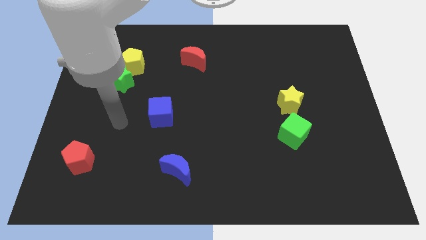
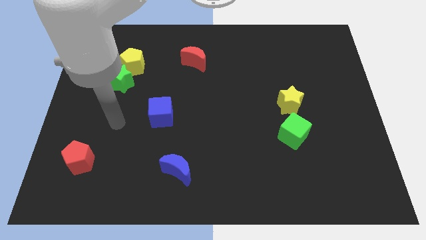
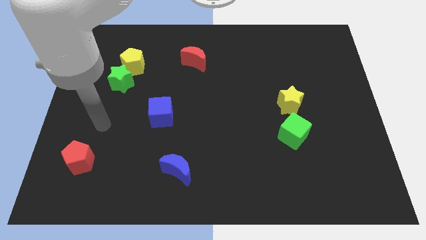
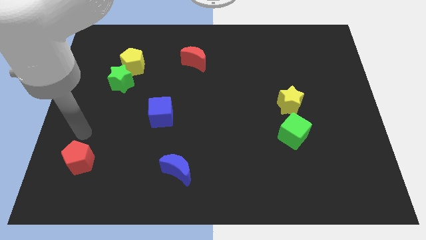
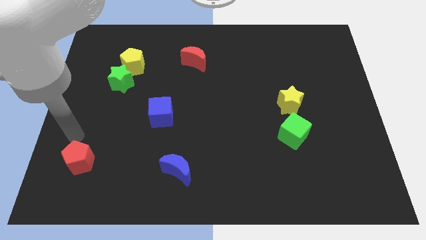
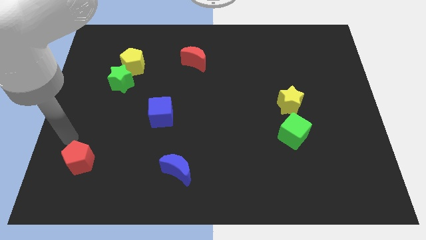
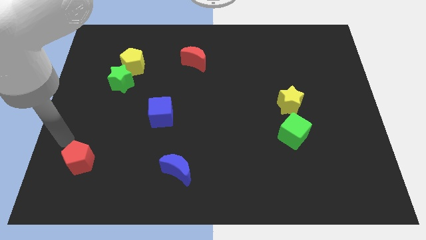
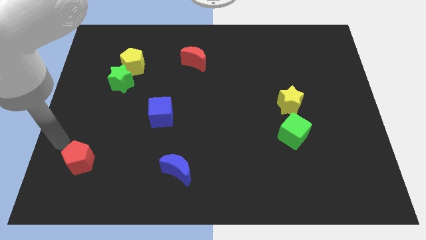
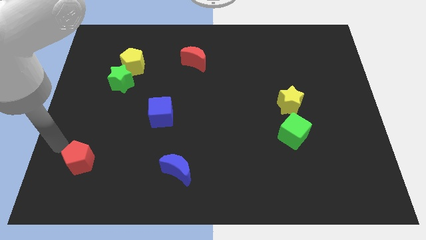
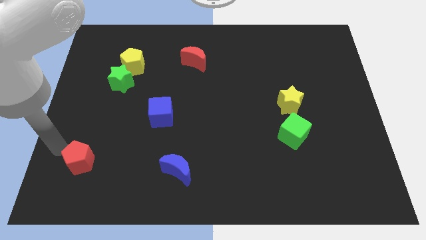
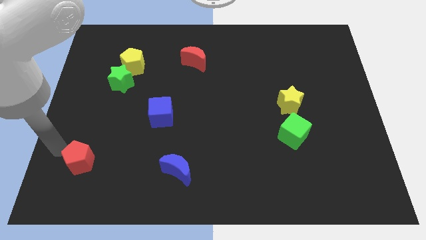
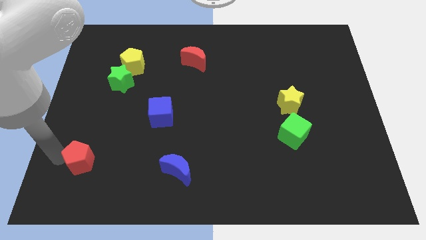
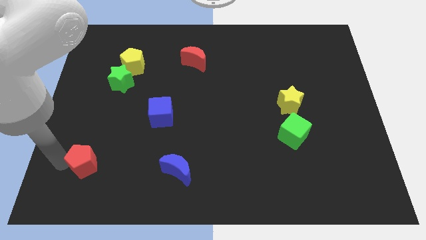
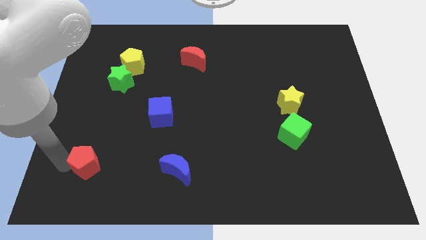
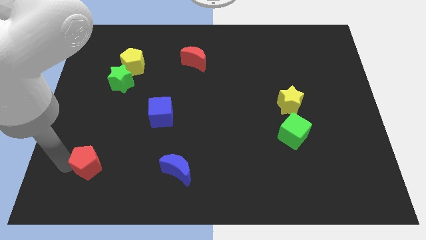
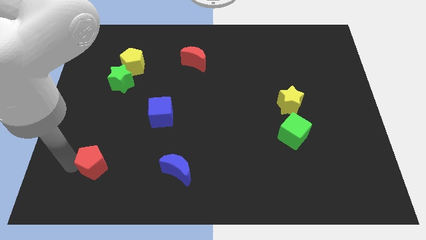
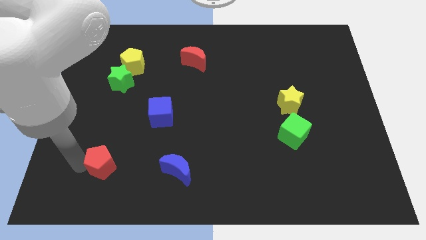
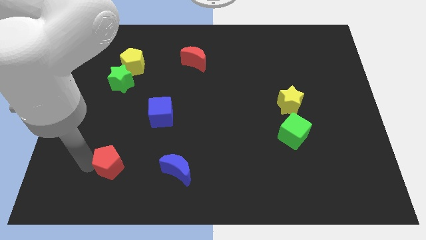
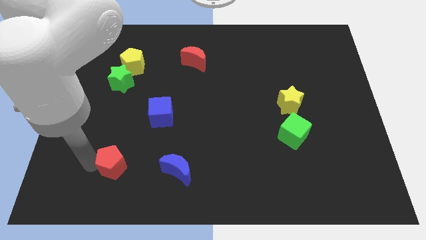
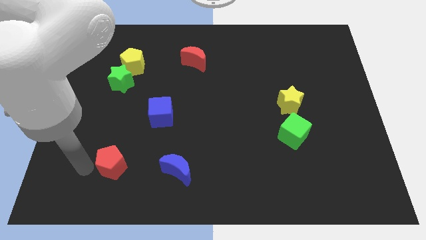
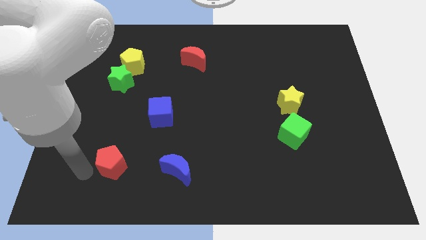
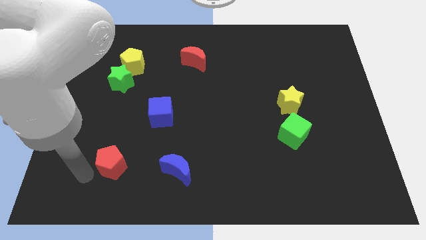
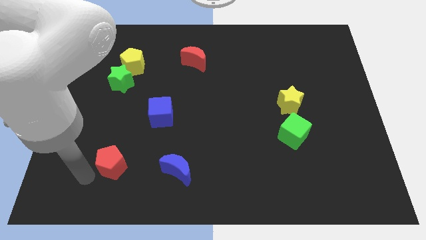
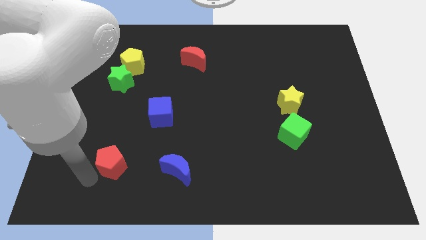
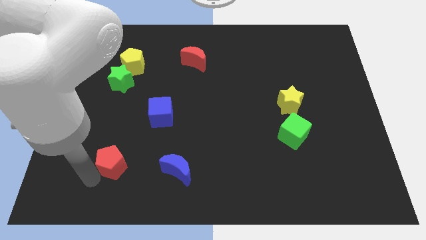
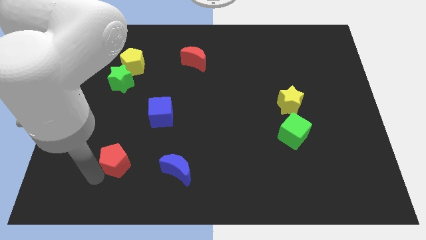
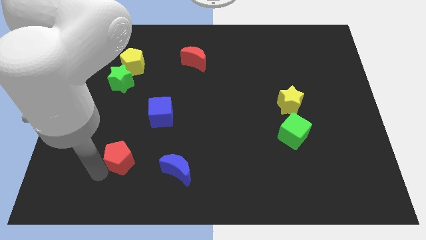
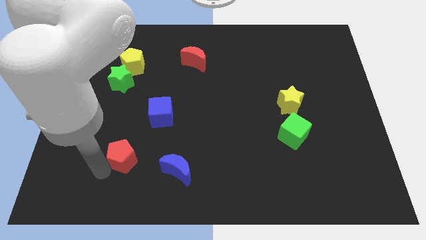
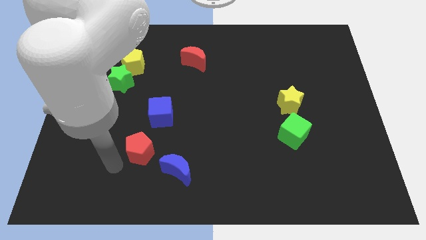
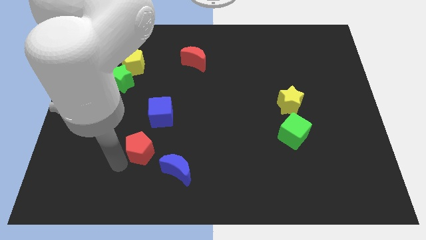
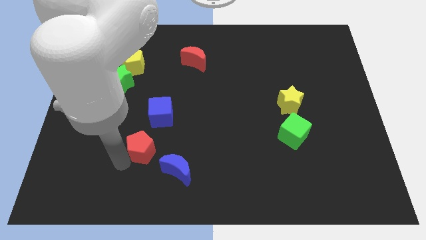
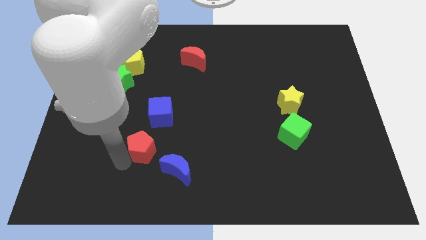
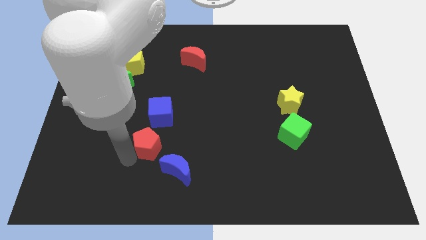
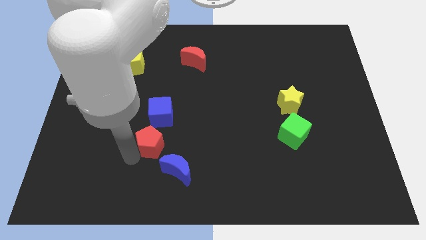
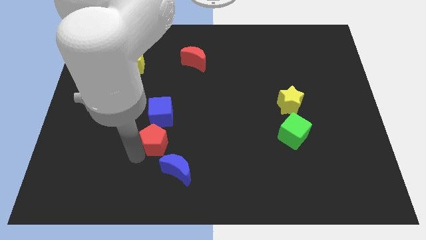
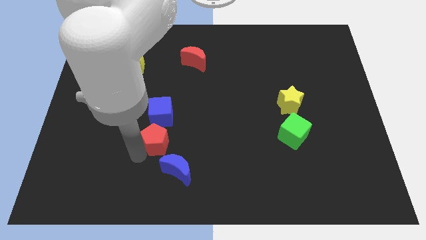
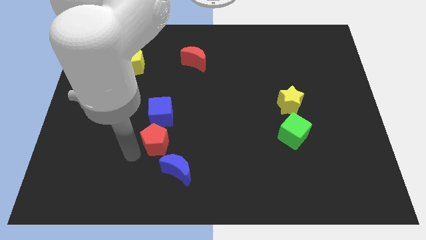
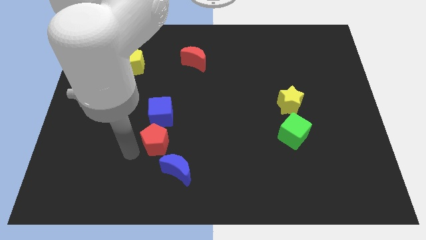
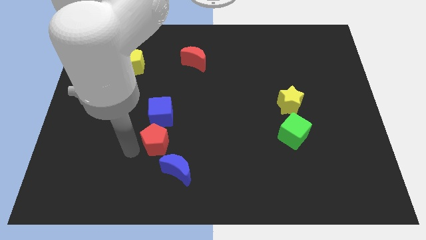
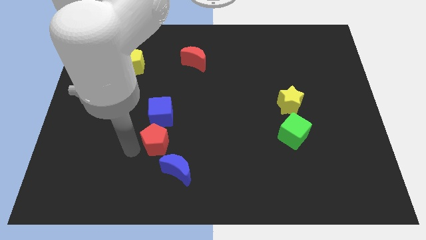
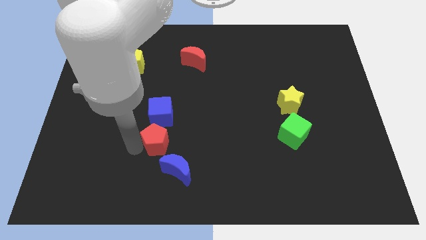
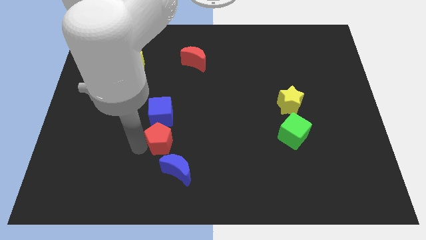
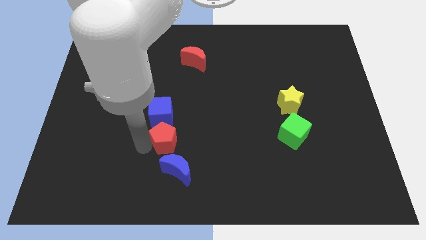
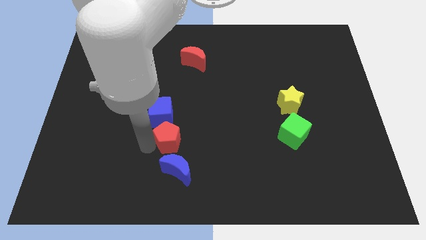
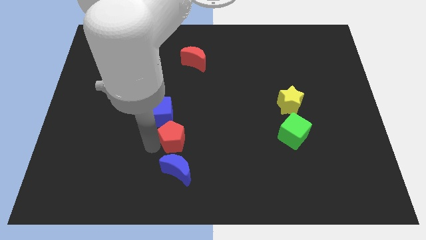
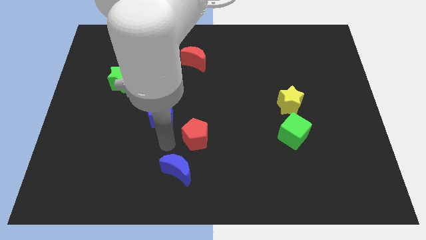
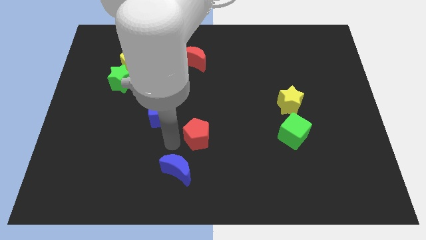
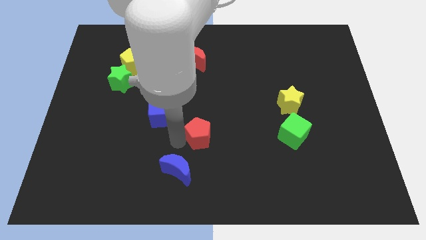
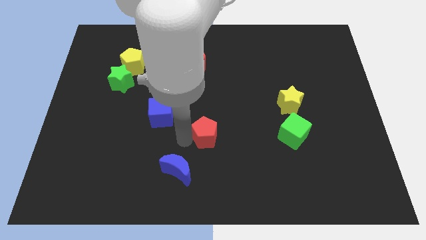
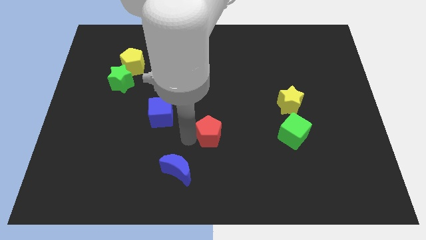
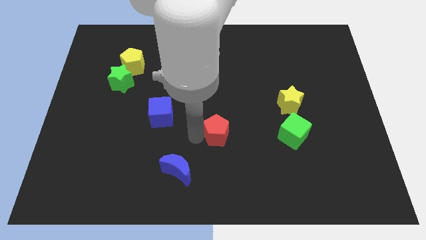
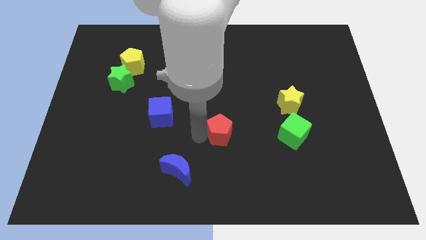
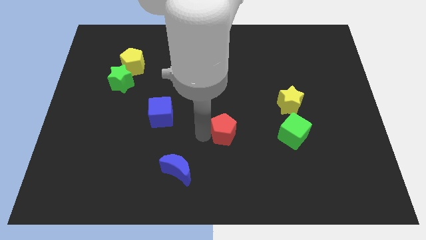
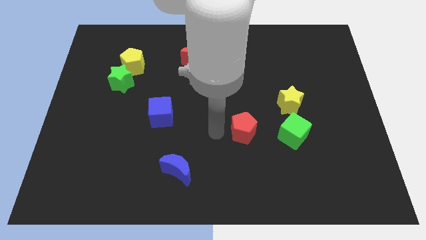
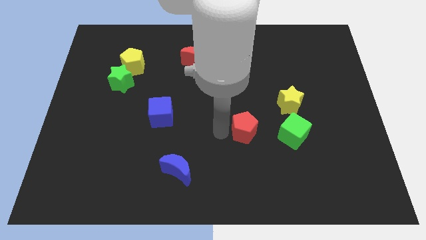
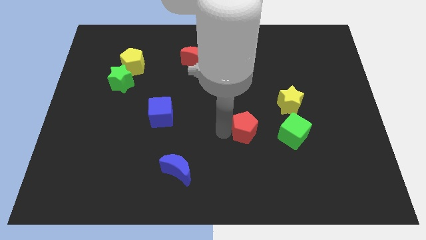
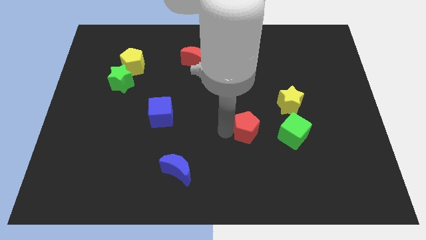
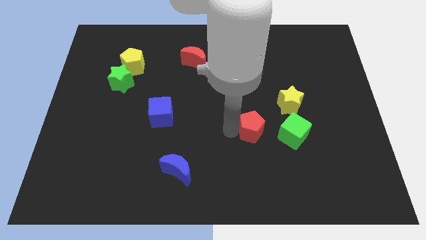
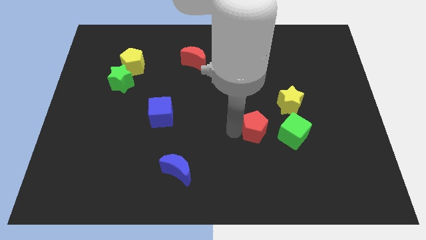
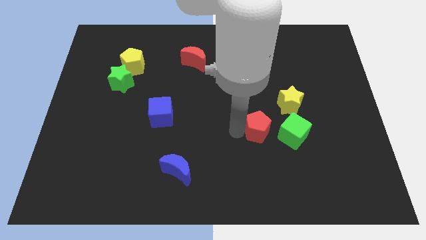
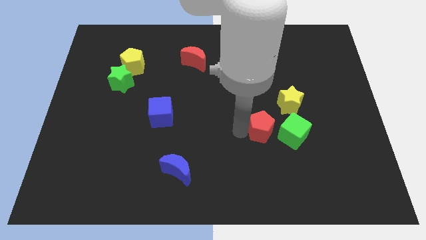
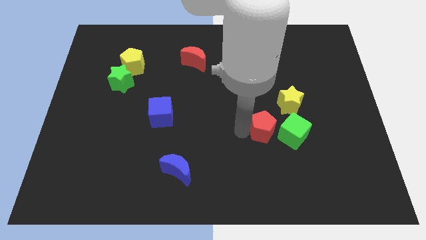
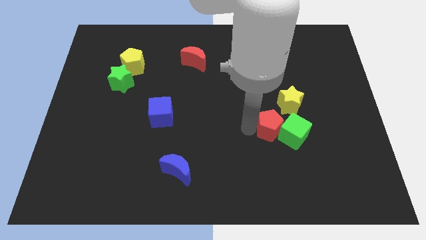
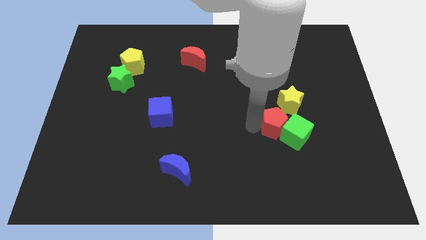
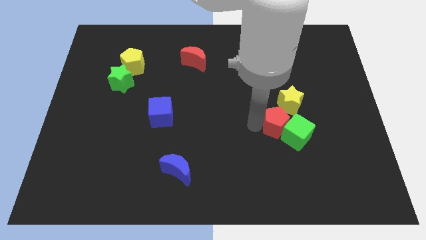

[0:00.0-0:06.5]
slide the red pentagon next to the green cube

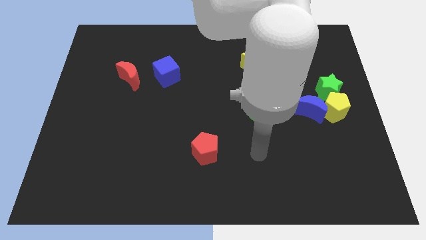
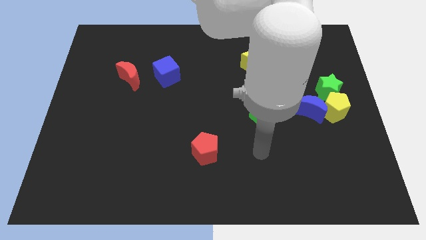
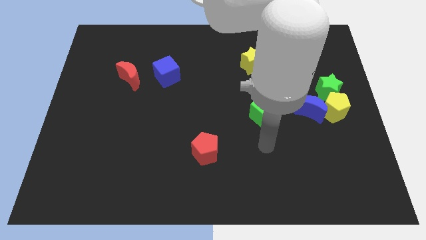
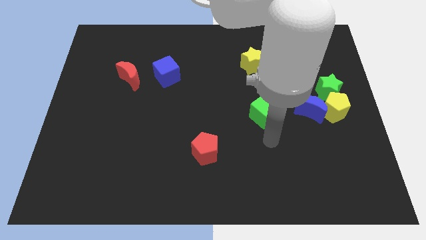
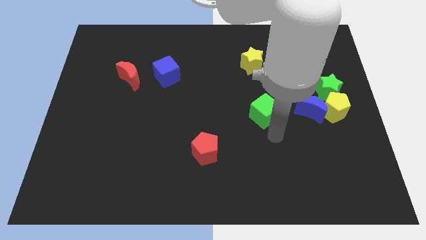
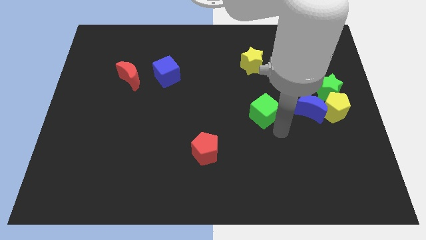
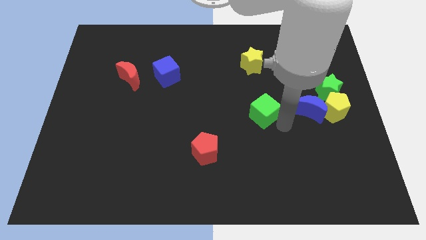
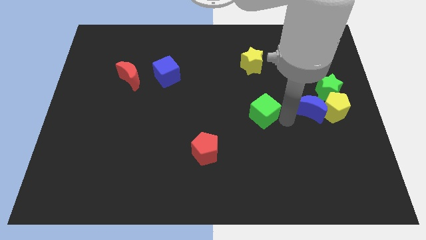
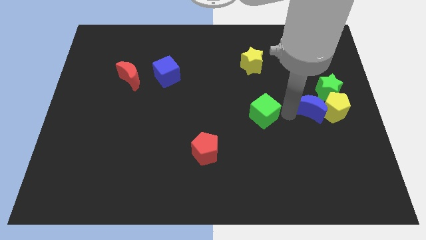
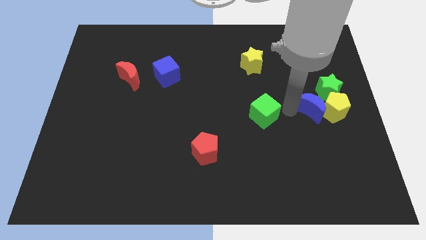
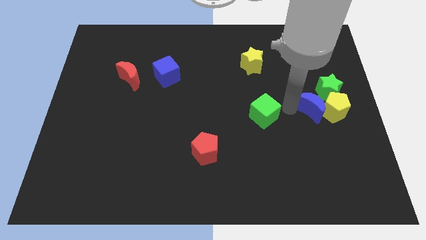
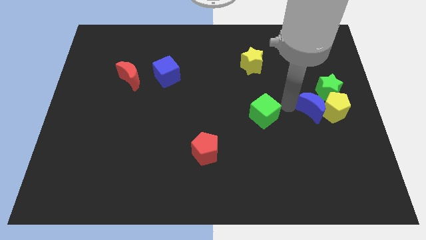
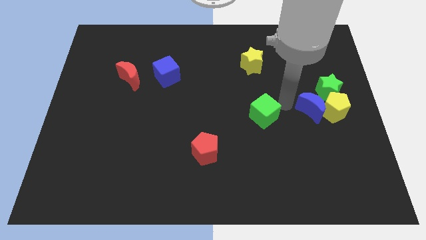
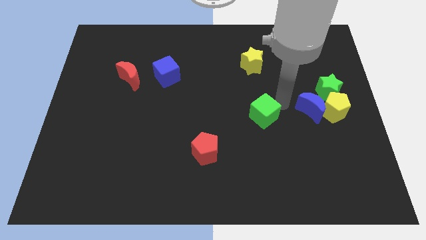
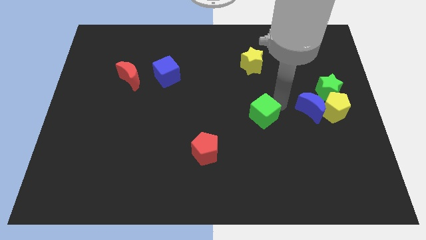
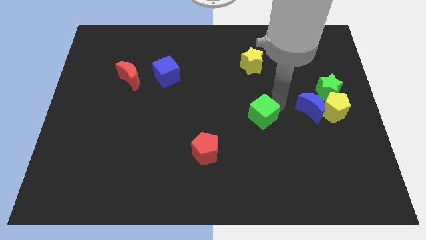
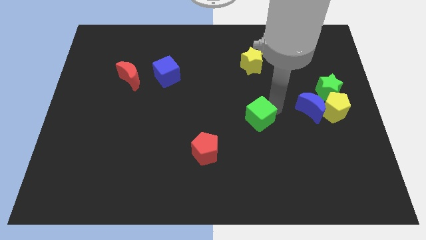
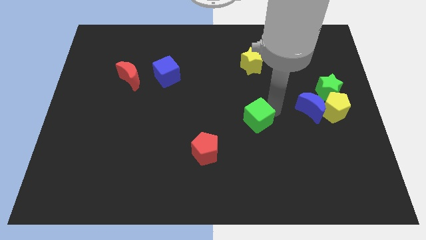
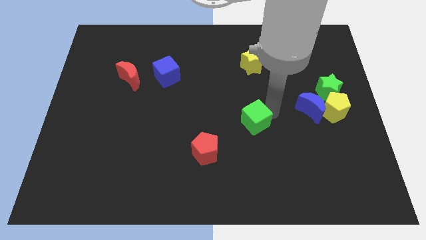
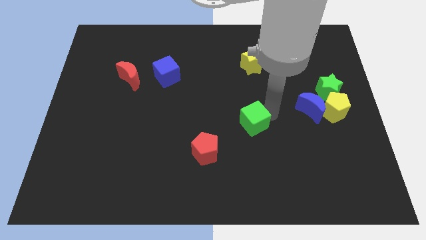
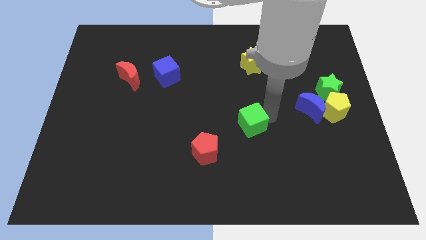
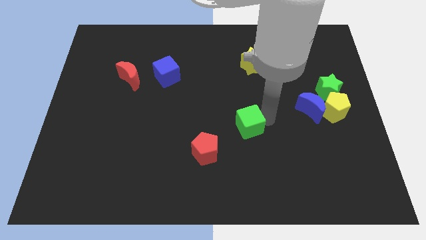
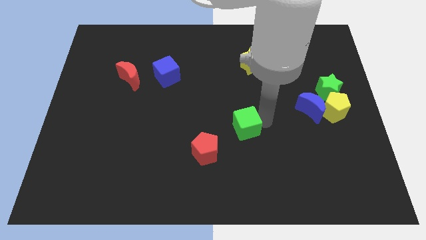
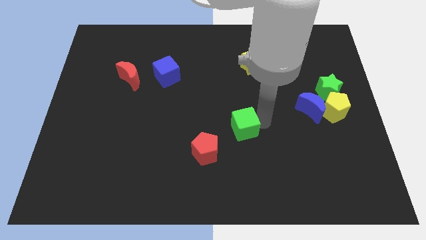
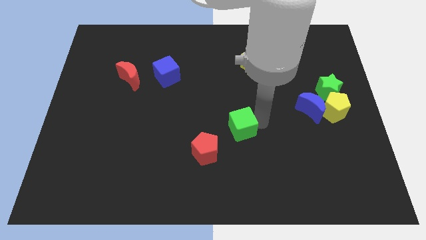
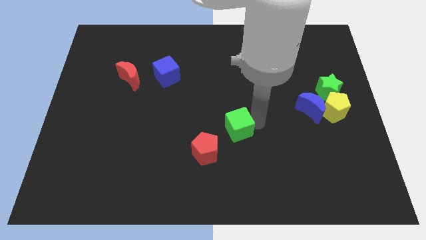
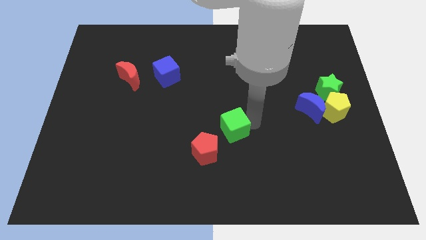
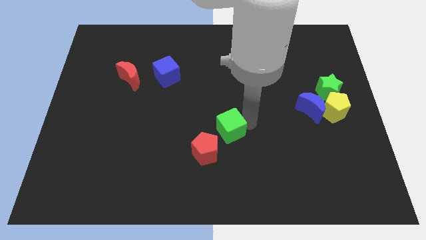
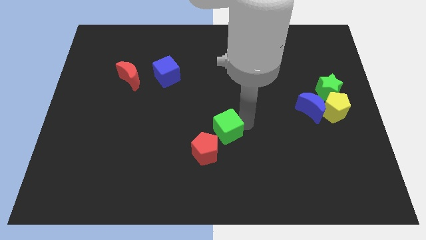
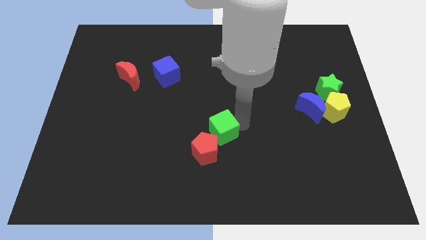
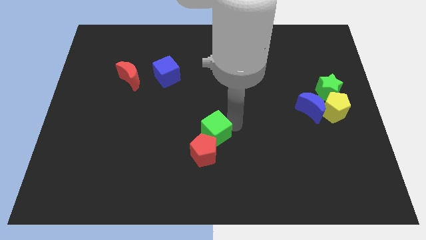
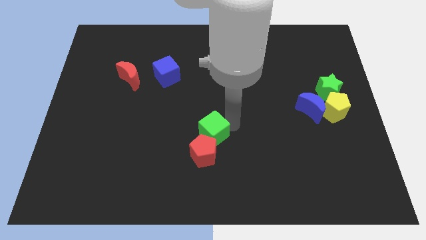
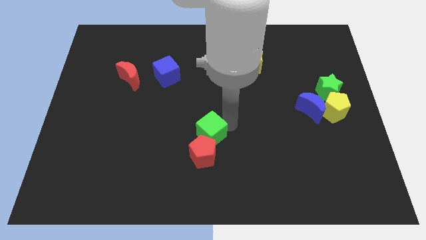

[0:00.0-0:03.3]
slide the green cube next to the red pentagon
